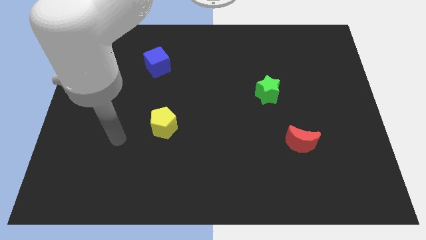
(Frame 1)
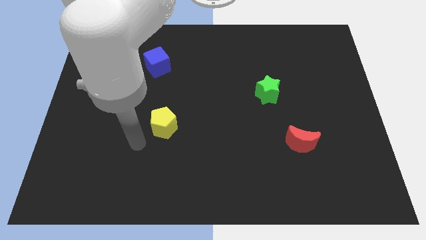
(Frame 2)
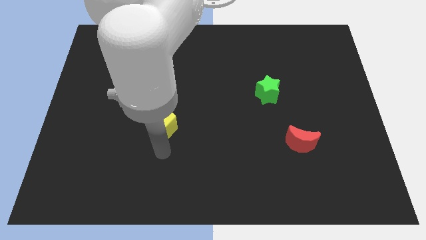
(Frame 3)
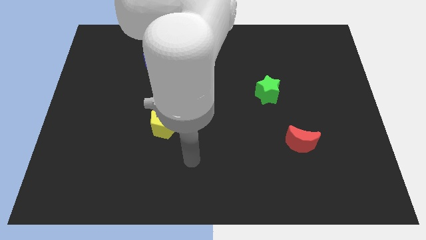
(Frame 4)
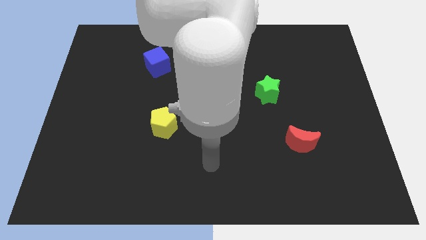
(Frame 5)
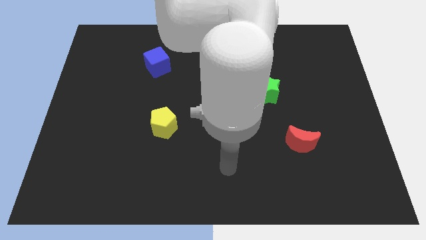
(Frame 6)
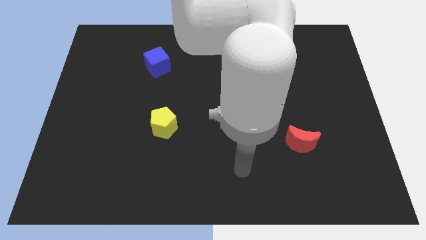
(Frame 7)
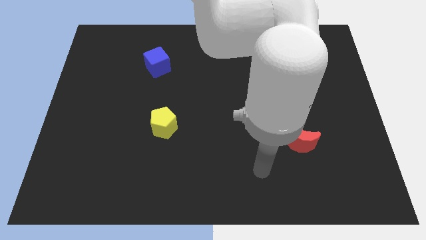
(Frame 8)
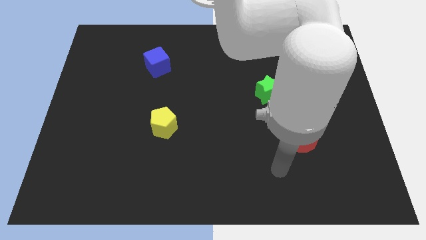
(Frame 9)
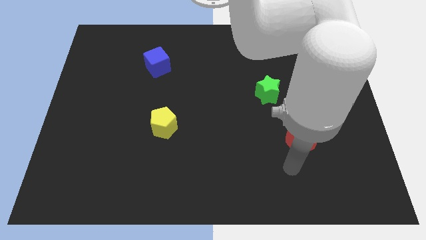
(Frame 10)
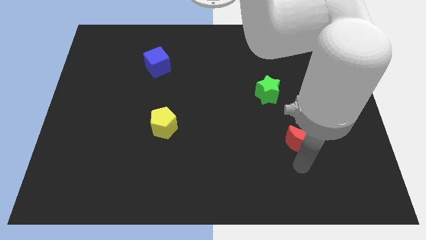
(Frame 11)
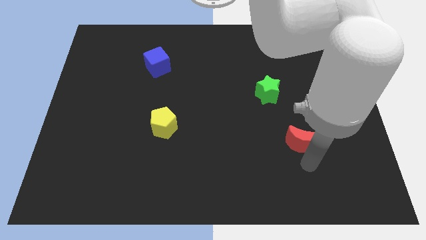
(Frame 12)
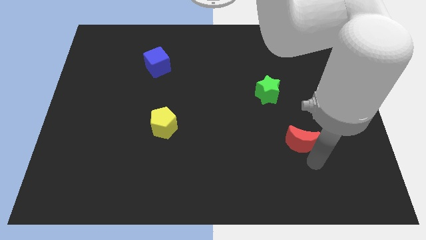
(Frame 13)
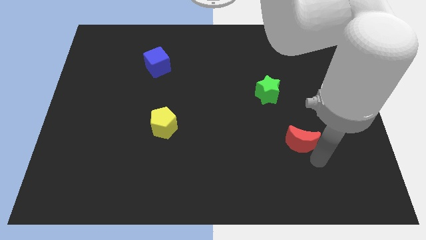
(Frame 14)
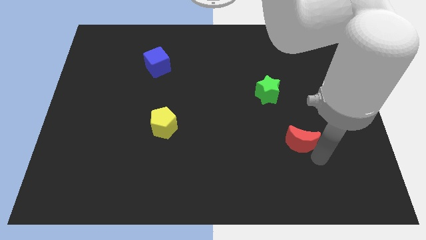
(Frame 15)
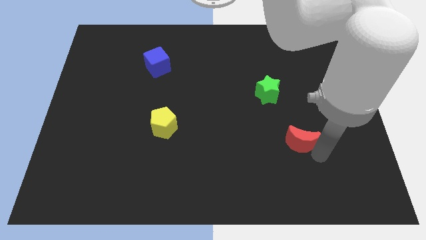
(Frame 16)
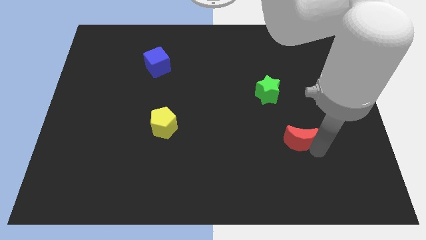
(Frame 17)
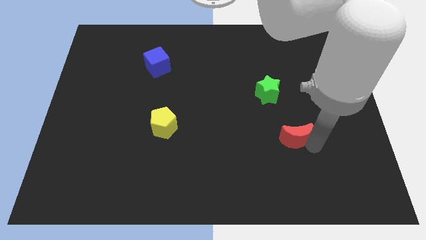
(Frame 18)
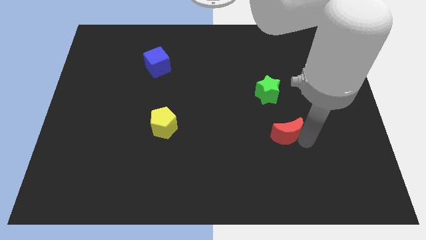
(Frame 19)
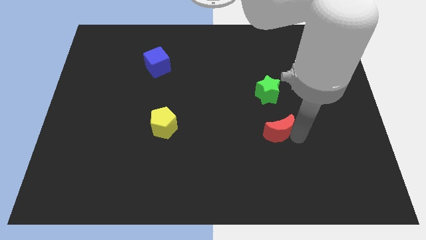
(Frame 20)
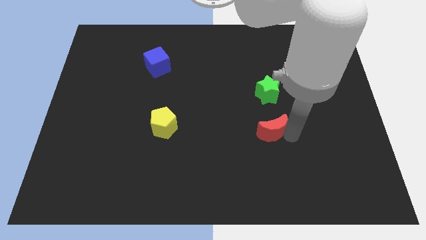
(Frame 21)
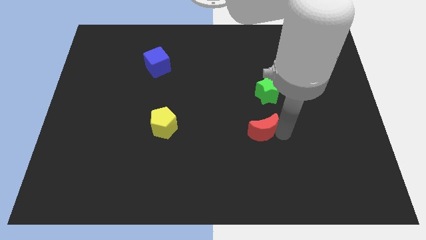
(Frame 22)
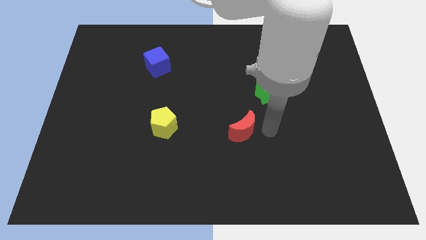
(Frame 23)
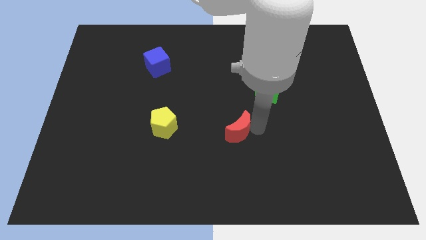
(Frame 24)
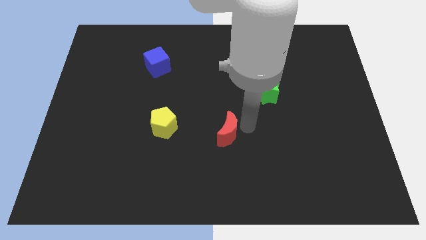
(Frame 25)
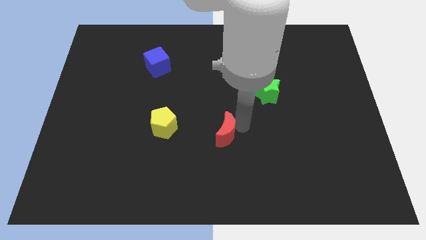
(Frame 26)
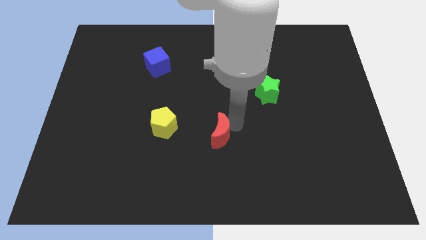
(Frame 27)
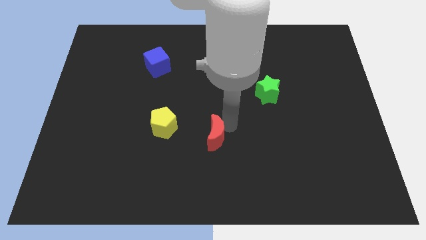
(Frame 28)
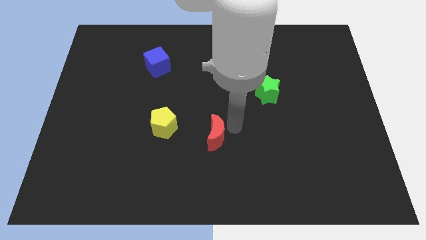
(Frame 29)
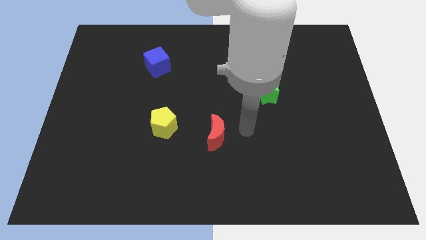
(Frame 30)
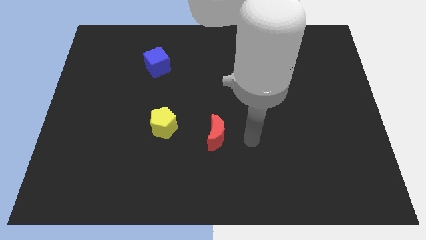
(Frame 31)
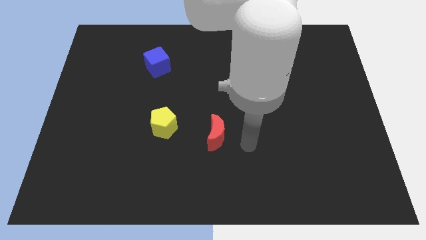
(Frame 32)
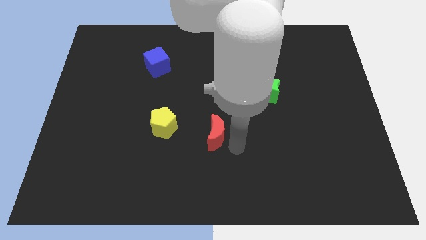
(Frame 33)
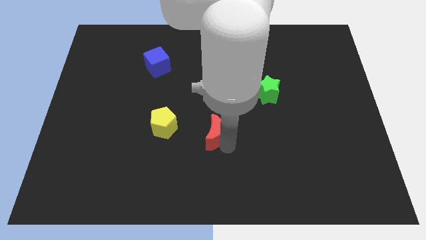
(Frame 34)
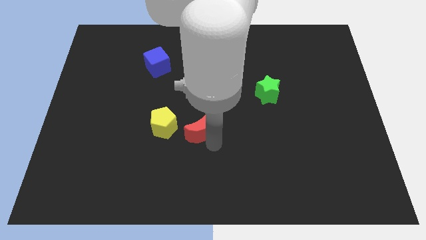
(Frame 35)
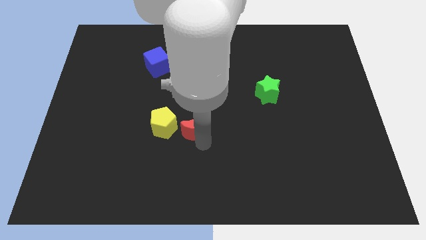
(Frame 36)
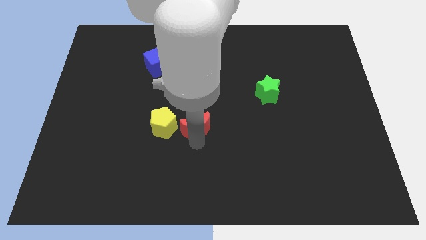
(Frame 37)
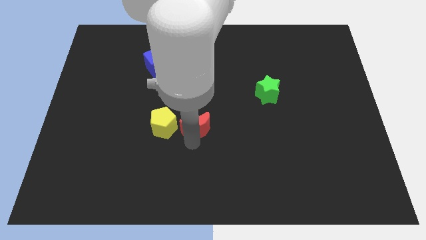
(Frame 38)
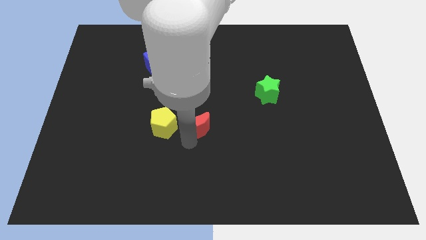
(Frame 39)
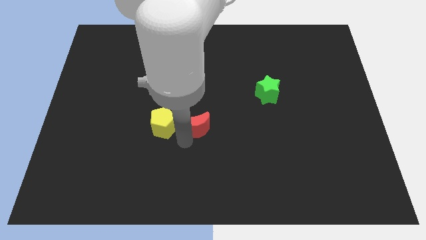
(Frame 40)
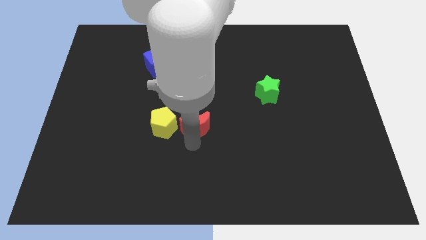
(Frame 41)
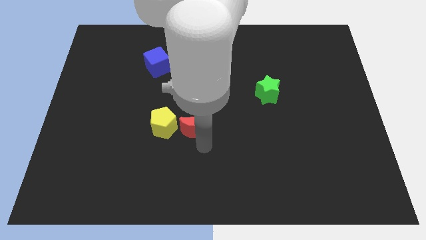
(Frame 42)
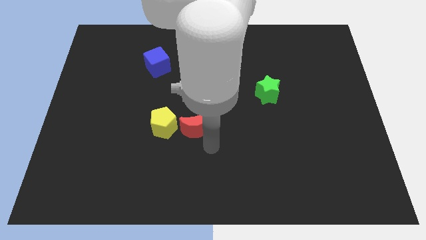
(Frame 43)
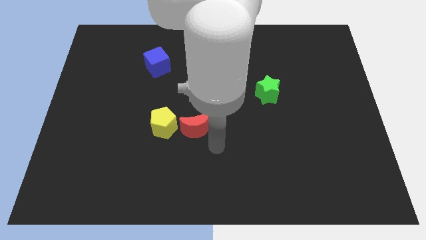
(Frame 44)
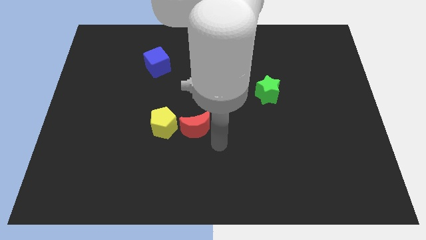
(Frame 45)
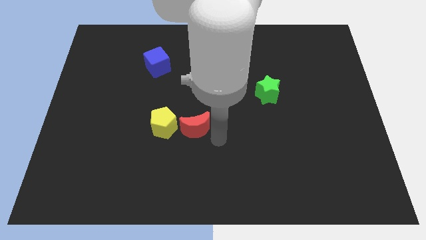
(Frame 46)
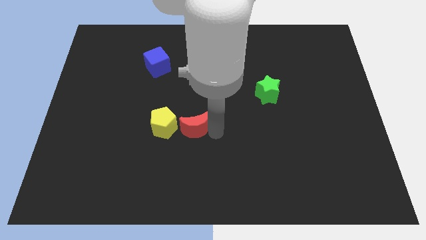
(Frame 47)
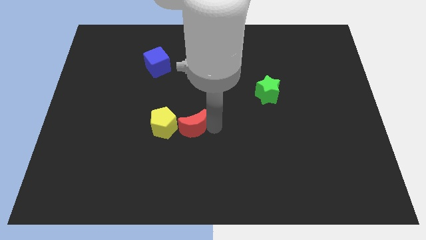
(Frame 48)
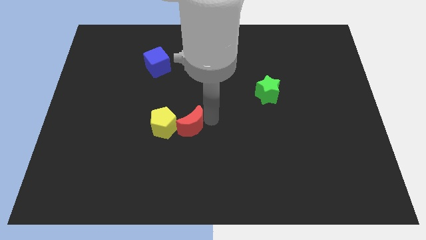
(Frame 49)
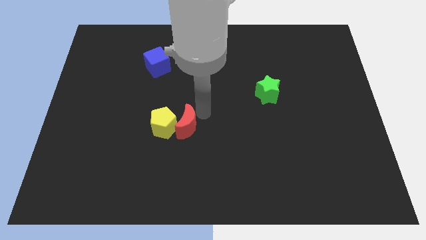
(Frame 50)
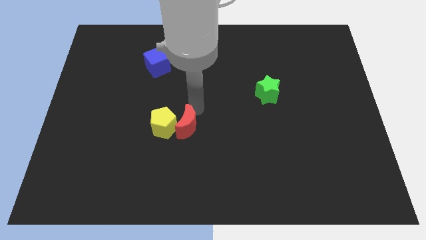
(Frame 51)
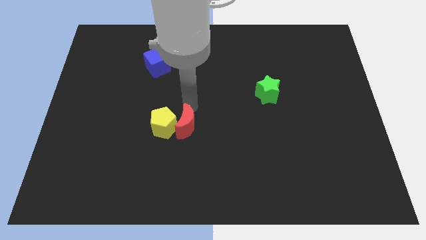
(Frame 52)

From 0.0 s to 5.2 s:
slide the red moon next to the yellow block

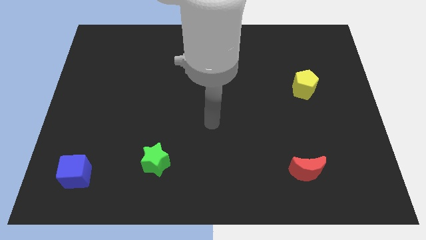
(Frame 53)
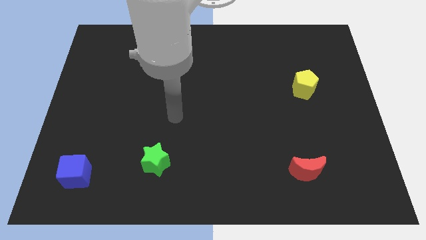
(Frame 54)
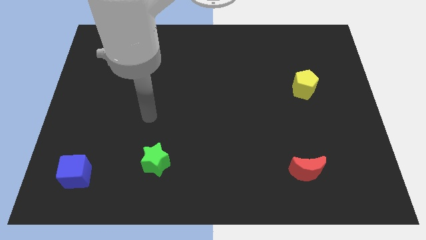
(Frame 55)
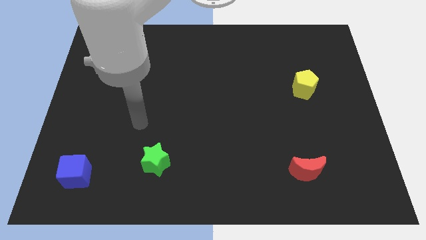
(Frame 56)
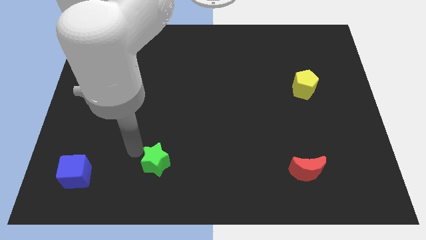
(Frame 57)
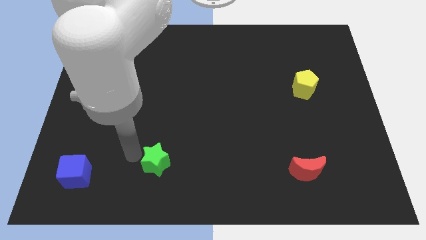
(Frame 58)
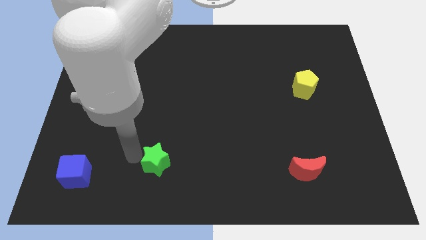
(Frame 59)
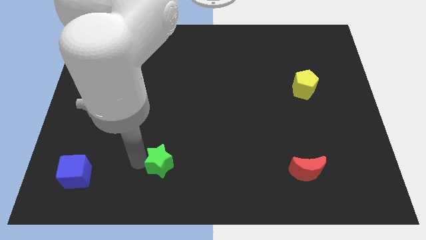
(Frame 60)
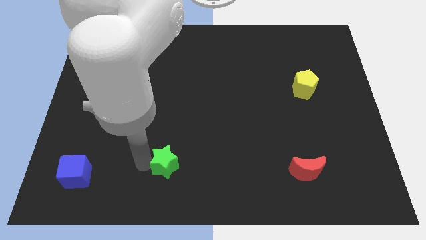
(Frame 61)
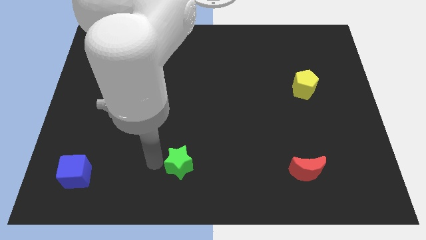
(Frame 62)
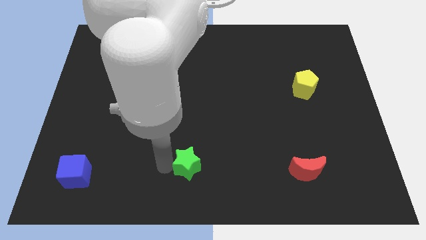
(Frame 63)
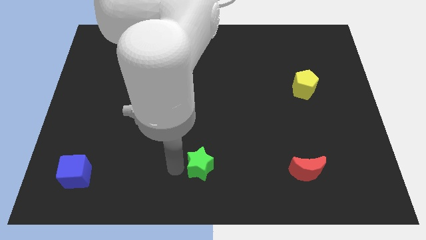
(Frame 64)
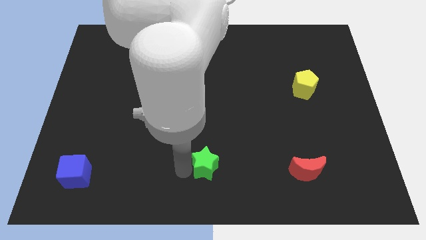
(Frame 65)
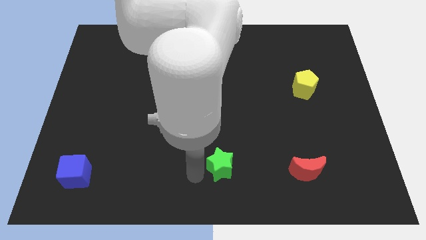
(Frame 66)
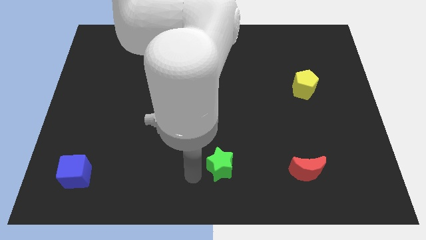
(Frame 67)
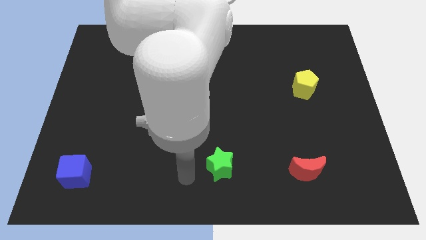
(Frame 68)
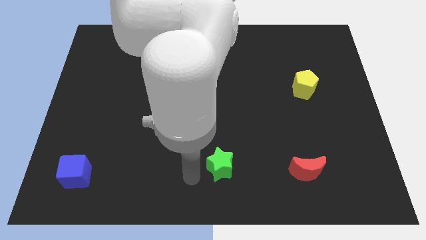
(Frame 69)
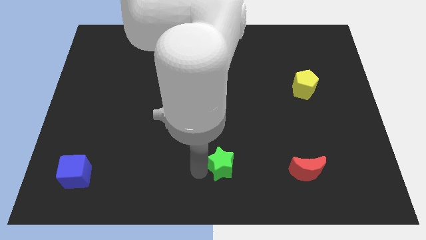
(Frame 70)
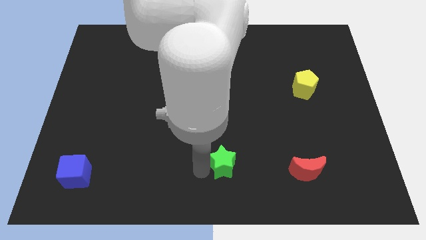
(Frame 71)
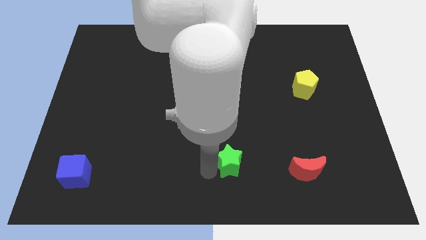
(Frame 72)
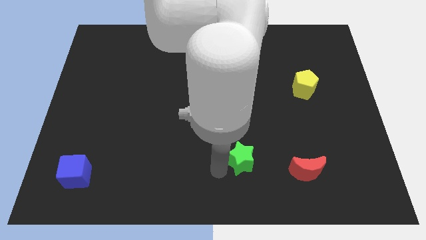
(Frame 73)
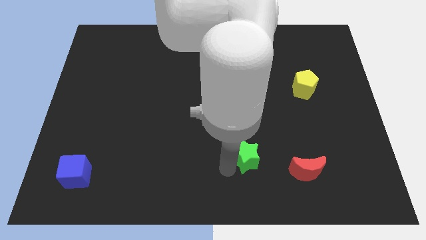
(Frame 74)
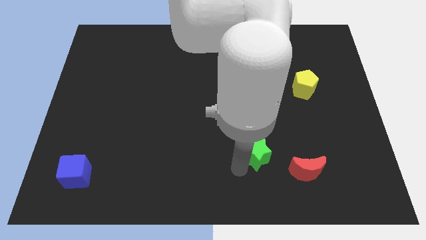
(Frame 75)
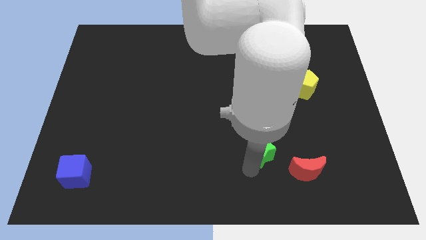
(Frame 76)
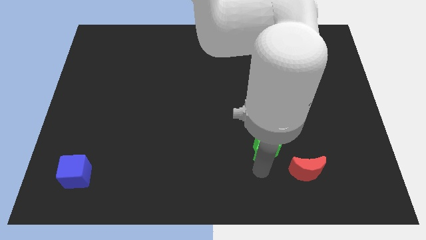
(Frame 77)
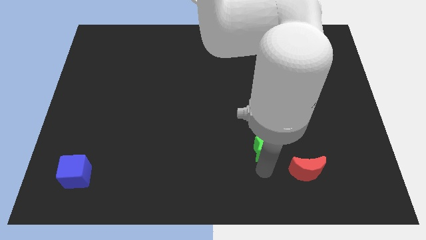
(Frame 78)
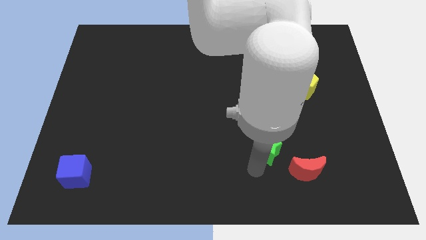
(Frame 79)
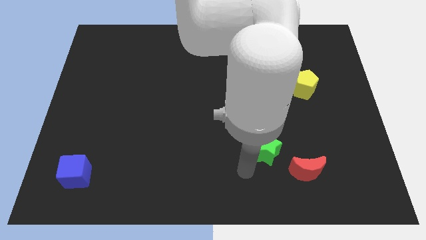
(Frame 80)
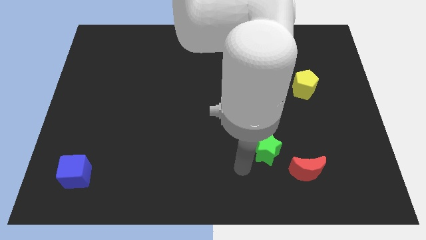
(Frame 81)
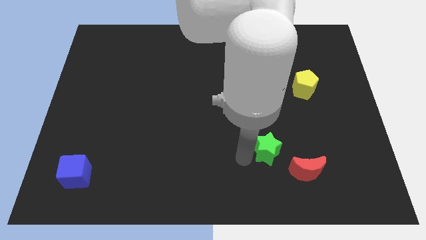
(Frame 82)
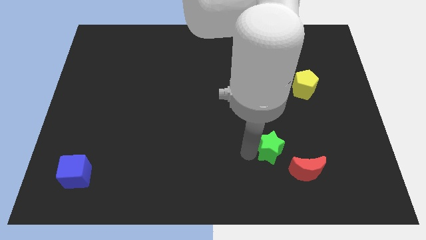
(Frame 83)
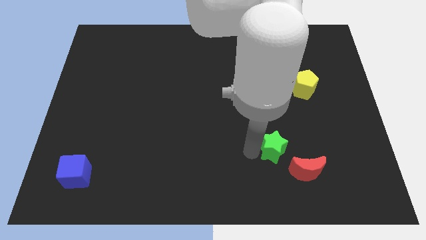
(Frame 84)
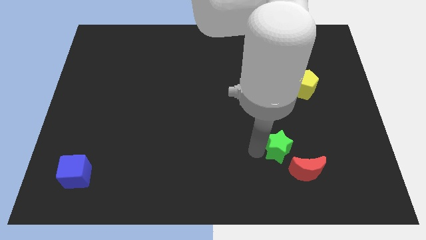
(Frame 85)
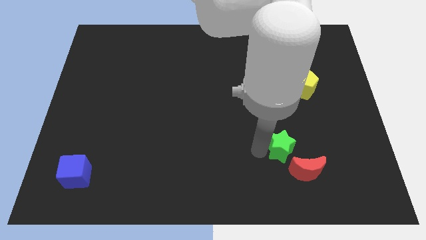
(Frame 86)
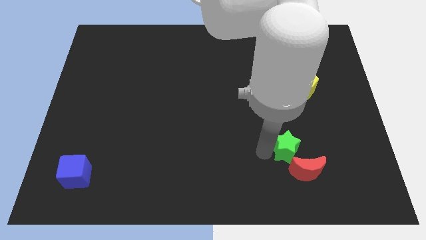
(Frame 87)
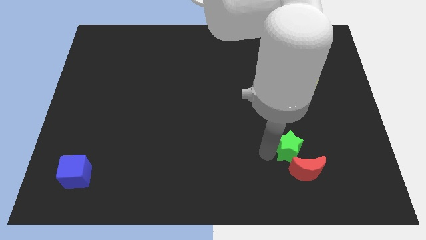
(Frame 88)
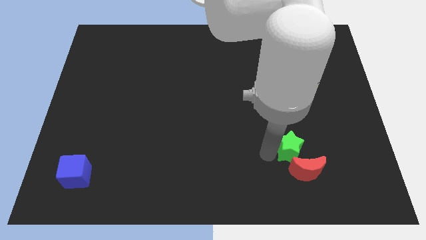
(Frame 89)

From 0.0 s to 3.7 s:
put the green star towards the red moon

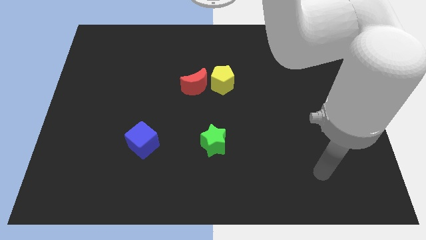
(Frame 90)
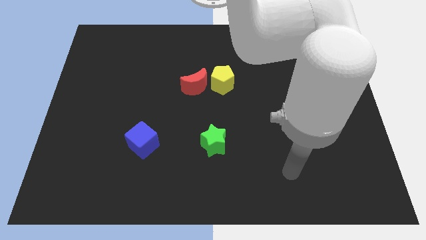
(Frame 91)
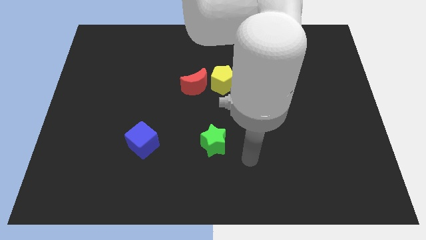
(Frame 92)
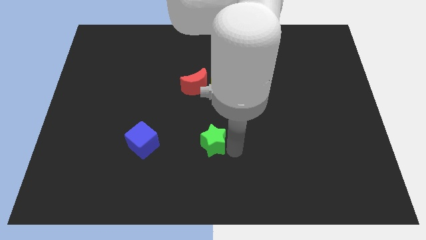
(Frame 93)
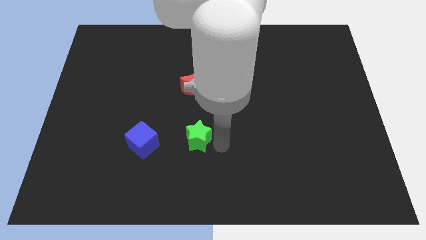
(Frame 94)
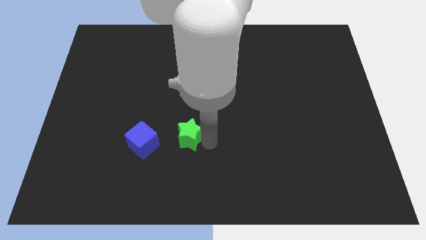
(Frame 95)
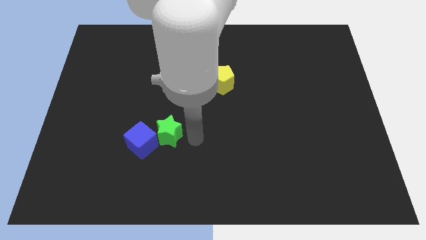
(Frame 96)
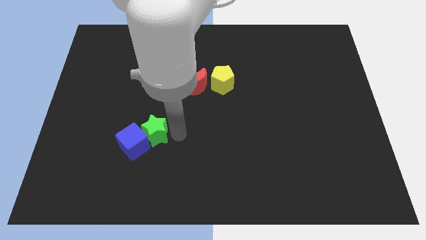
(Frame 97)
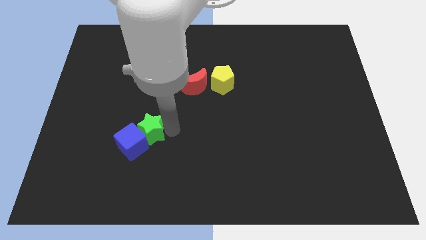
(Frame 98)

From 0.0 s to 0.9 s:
move the star close to the blue block
